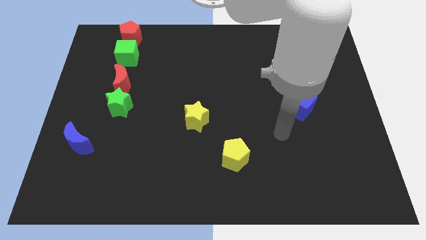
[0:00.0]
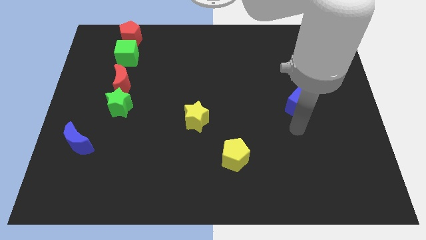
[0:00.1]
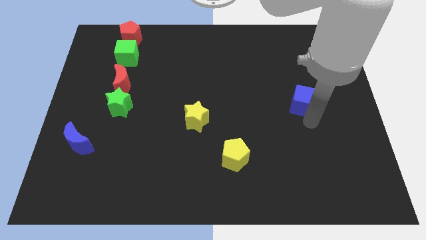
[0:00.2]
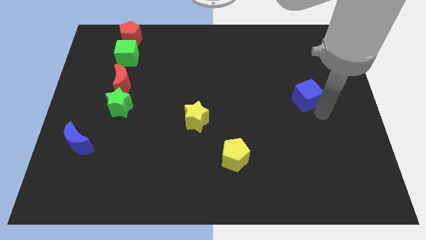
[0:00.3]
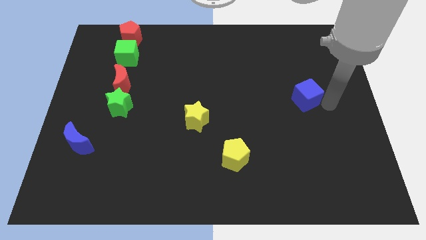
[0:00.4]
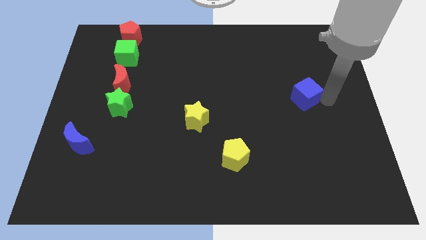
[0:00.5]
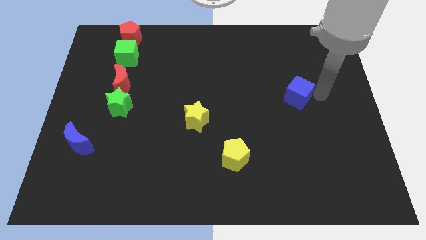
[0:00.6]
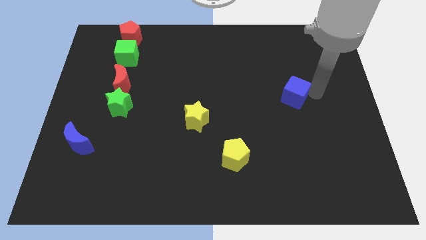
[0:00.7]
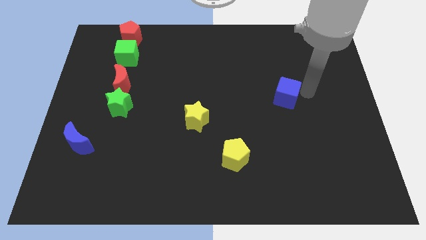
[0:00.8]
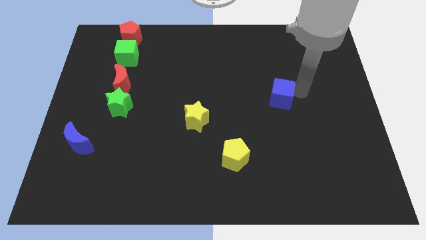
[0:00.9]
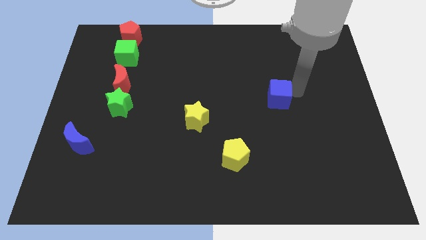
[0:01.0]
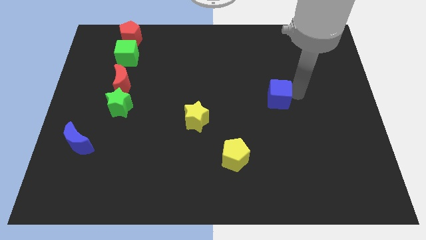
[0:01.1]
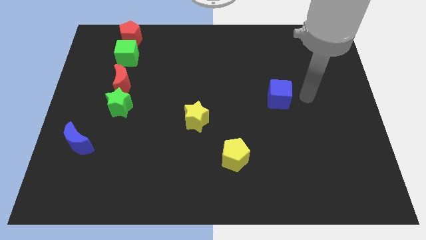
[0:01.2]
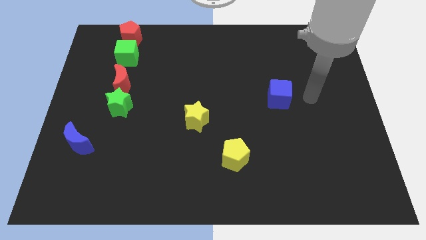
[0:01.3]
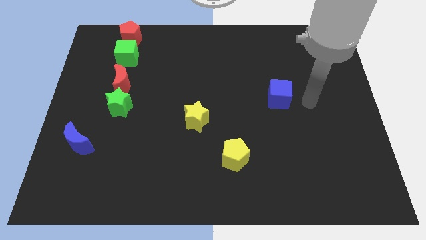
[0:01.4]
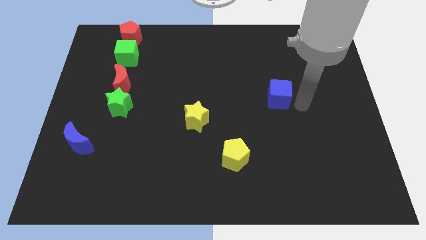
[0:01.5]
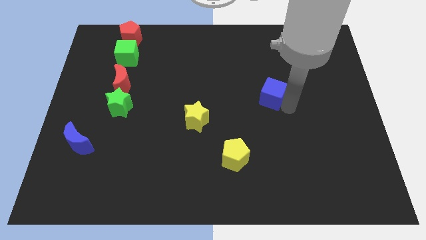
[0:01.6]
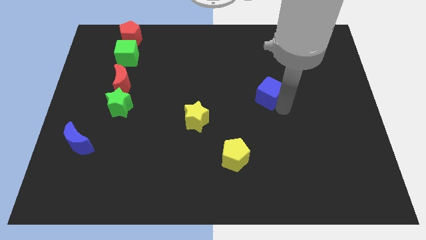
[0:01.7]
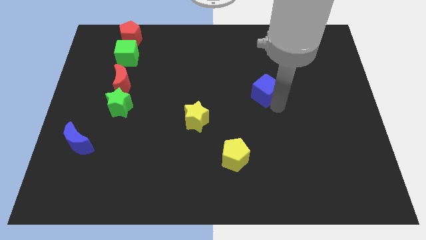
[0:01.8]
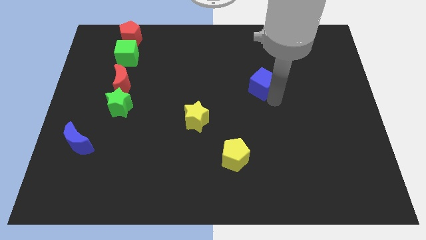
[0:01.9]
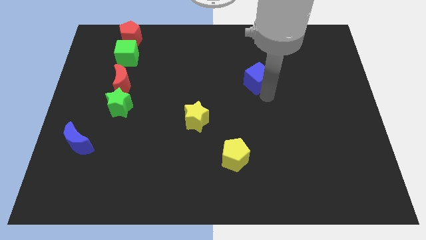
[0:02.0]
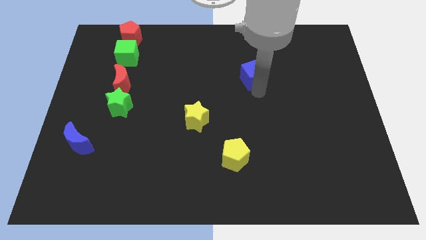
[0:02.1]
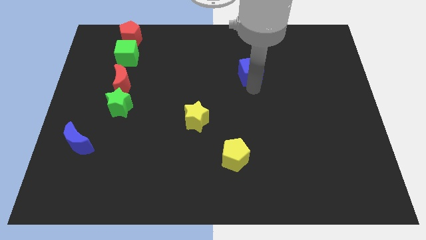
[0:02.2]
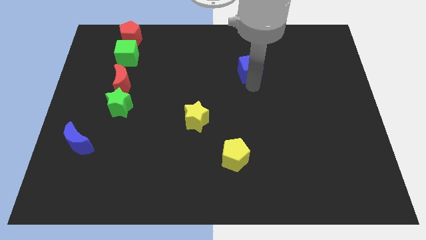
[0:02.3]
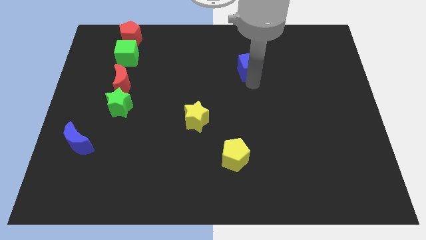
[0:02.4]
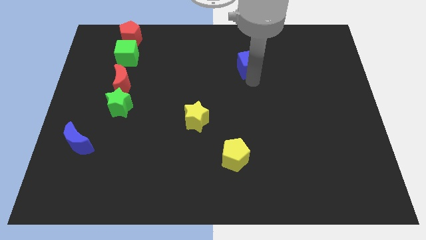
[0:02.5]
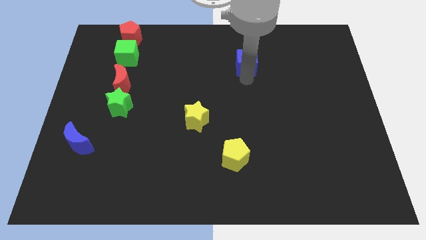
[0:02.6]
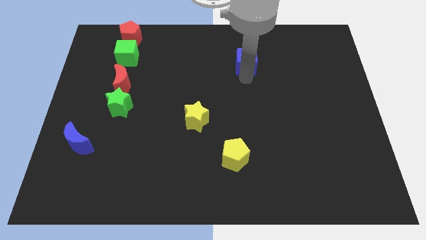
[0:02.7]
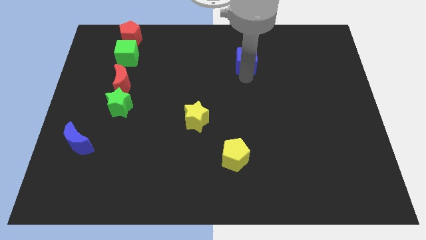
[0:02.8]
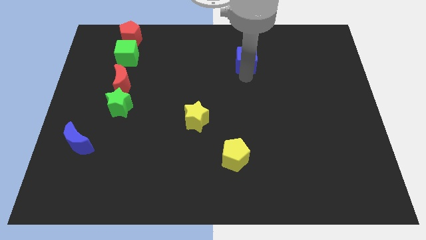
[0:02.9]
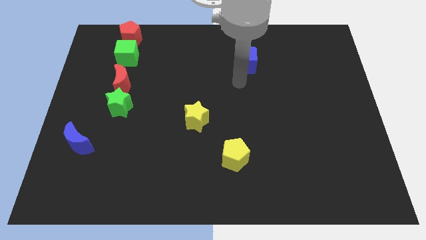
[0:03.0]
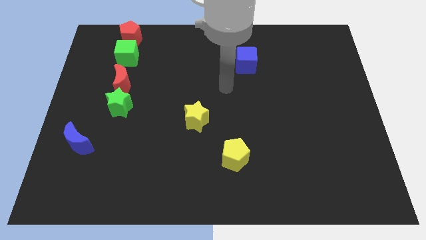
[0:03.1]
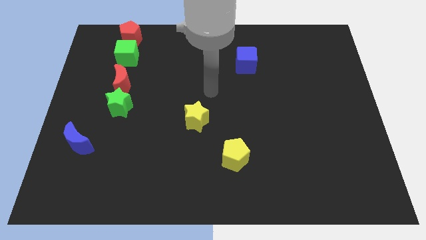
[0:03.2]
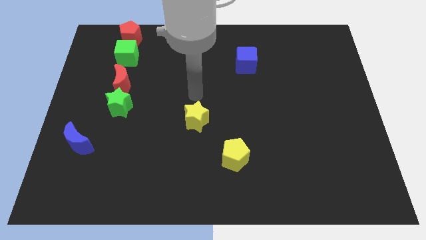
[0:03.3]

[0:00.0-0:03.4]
move blue cube slightly to the top of the board

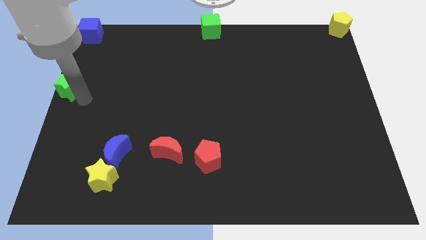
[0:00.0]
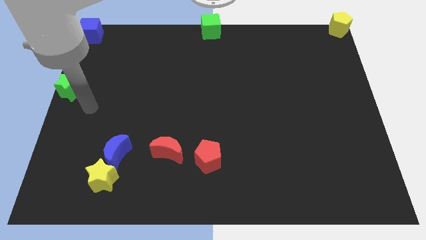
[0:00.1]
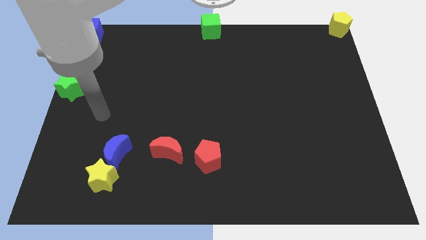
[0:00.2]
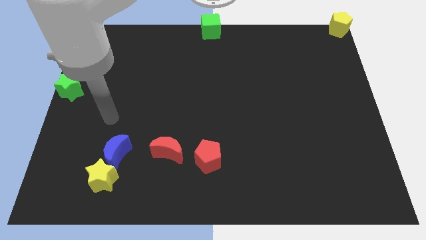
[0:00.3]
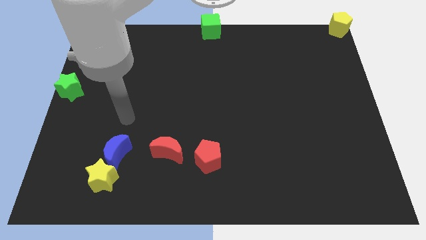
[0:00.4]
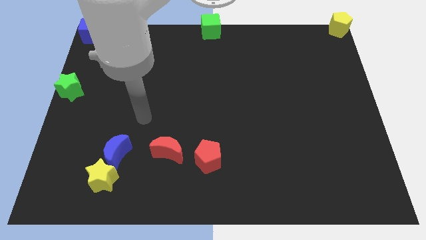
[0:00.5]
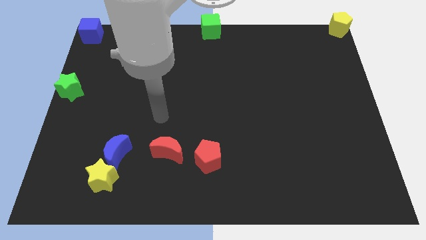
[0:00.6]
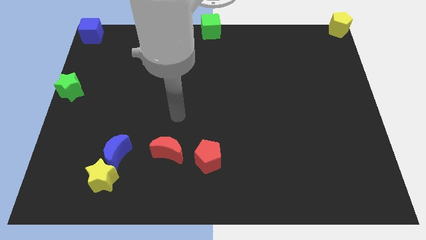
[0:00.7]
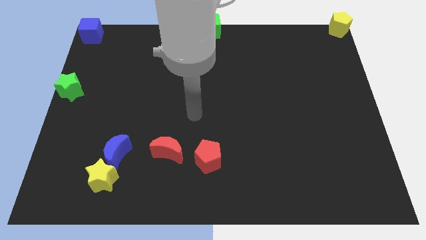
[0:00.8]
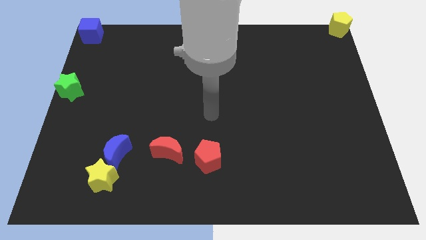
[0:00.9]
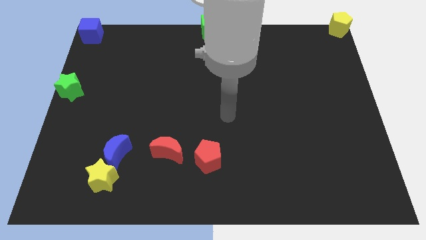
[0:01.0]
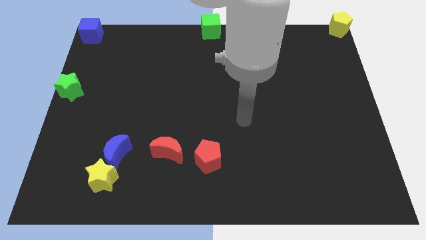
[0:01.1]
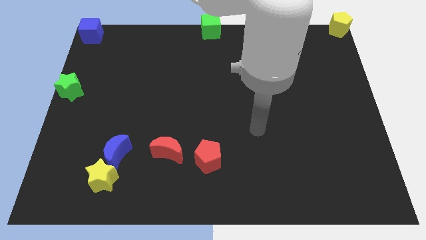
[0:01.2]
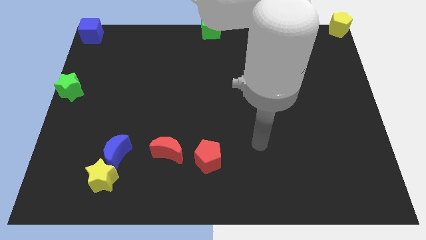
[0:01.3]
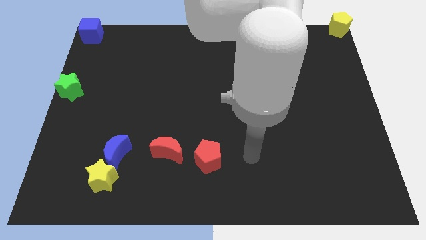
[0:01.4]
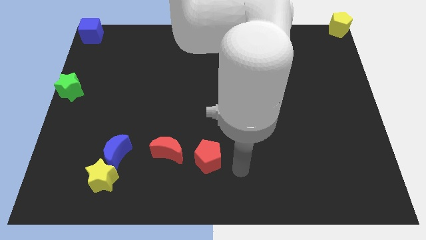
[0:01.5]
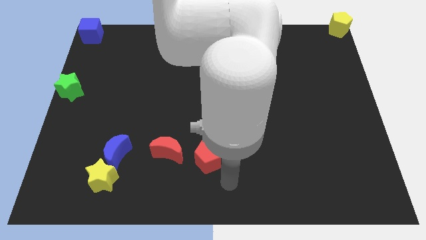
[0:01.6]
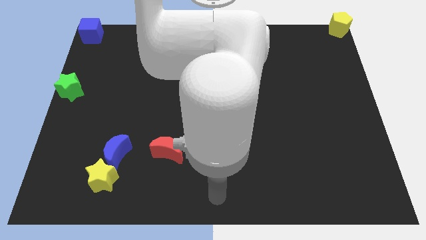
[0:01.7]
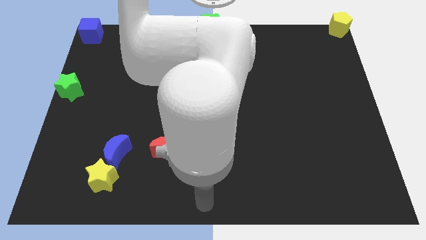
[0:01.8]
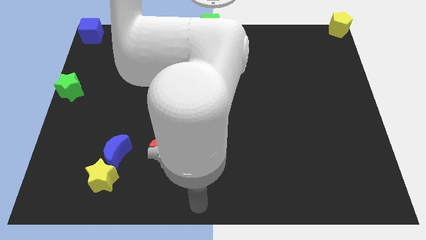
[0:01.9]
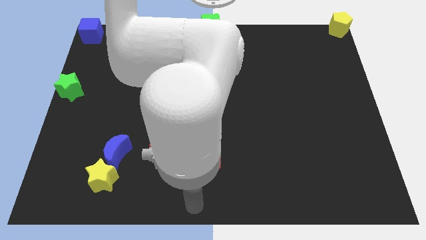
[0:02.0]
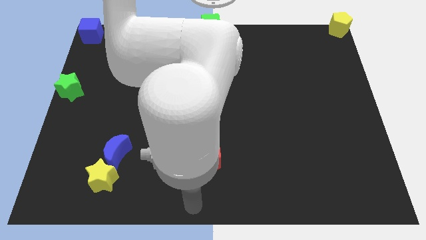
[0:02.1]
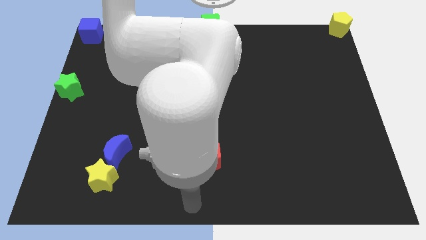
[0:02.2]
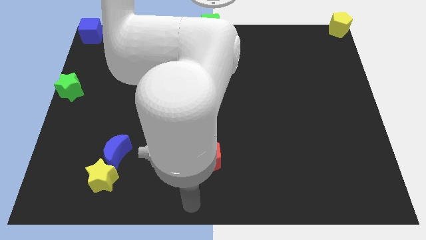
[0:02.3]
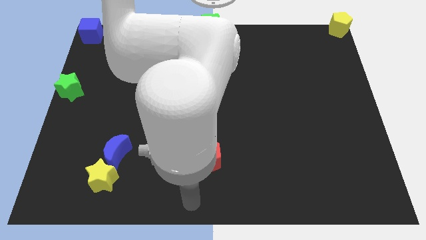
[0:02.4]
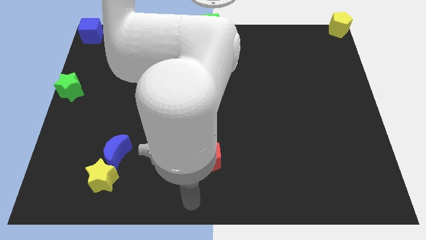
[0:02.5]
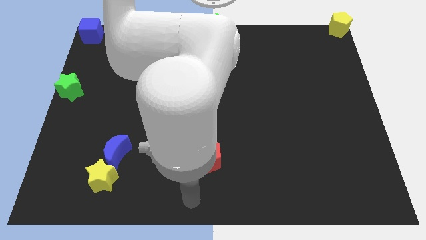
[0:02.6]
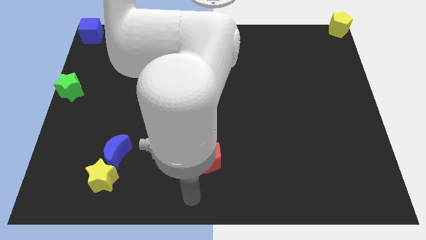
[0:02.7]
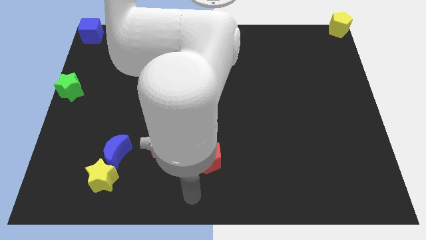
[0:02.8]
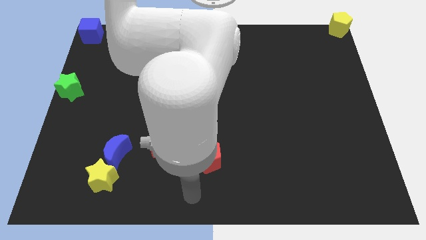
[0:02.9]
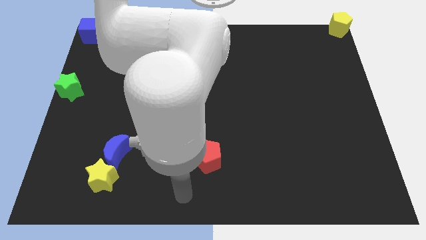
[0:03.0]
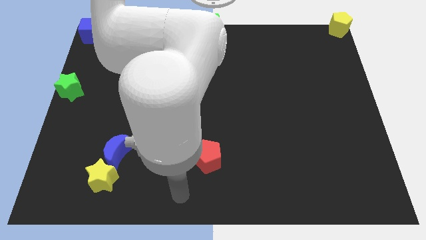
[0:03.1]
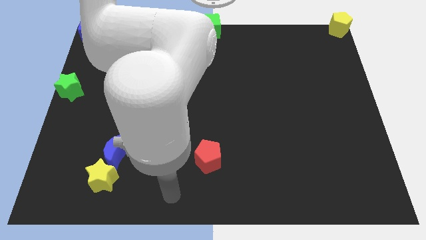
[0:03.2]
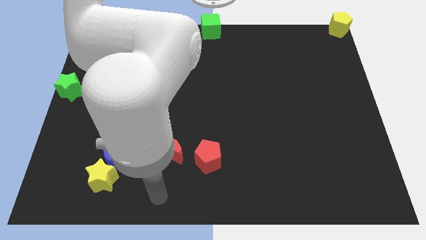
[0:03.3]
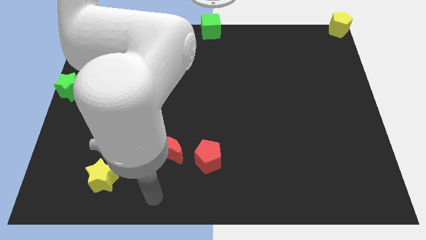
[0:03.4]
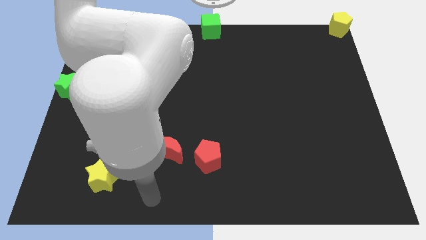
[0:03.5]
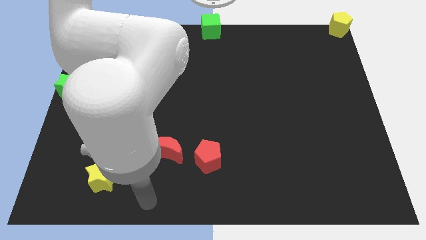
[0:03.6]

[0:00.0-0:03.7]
put your arm vertically to the bottom of the red crescent

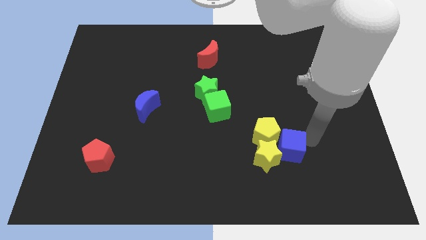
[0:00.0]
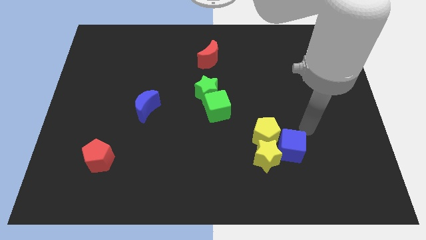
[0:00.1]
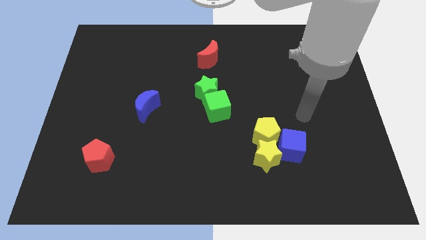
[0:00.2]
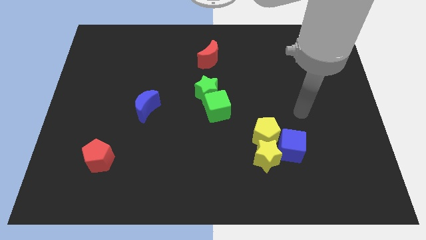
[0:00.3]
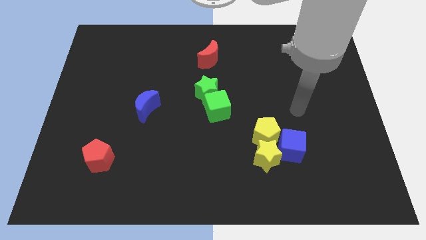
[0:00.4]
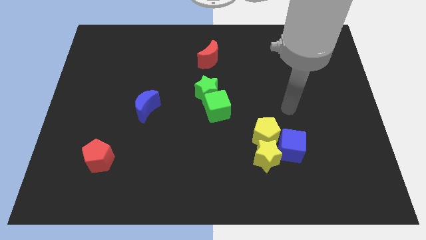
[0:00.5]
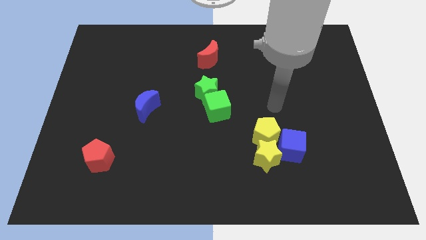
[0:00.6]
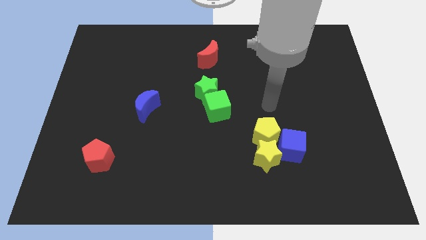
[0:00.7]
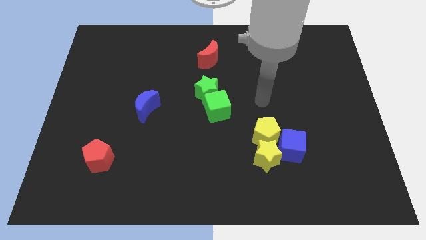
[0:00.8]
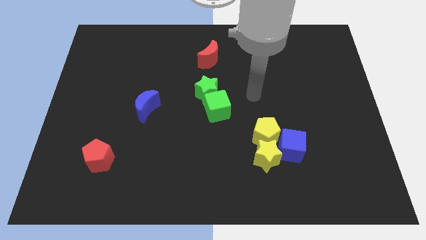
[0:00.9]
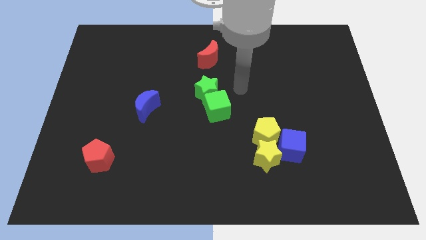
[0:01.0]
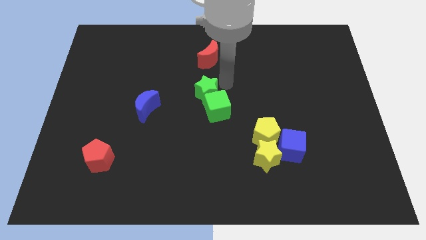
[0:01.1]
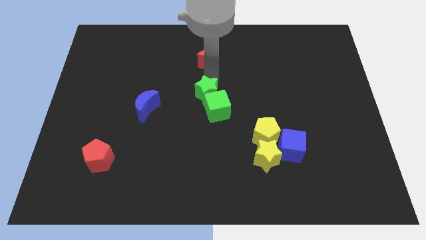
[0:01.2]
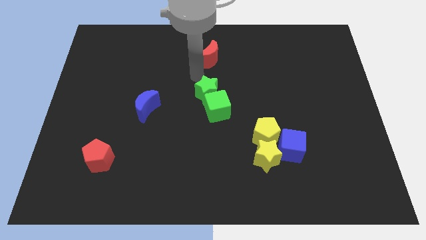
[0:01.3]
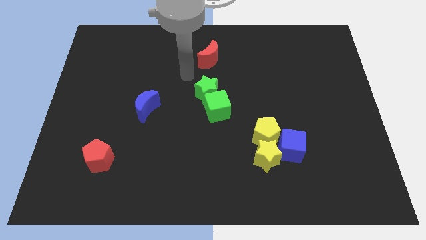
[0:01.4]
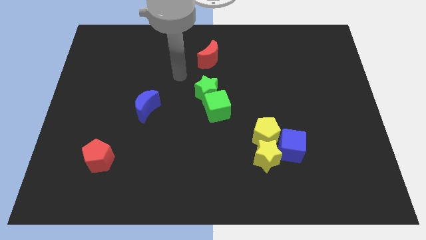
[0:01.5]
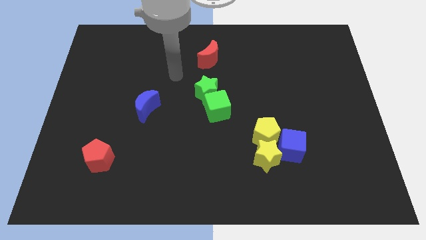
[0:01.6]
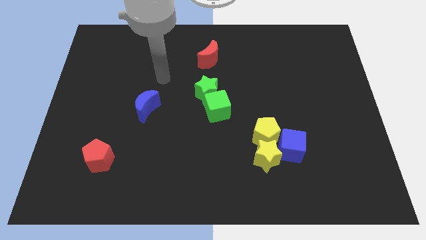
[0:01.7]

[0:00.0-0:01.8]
move your arm away from the blue cube

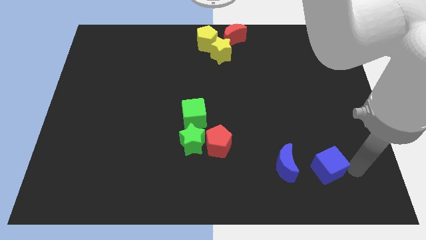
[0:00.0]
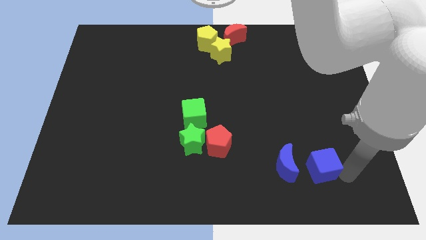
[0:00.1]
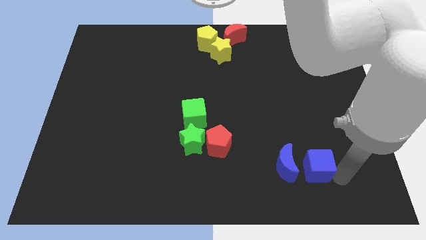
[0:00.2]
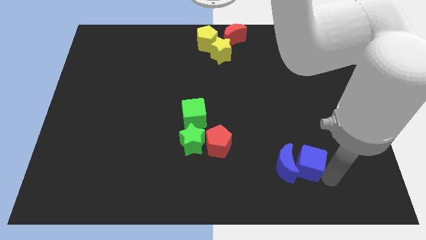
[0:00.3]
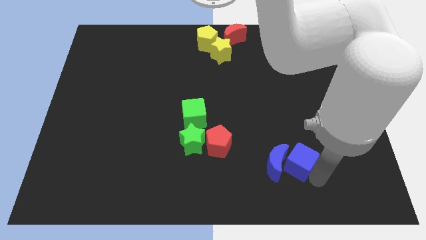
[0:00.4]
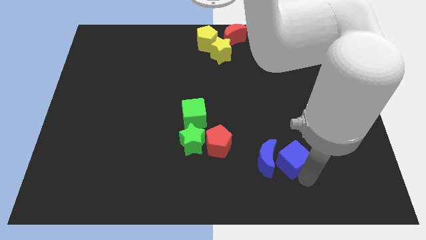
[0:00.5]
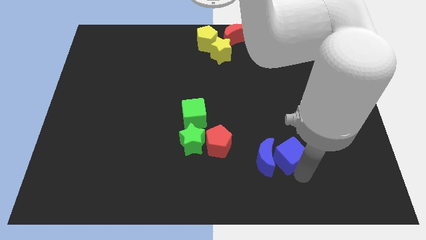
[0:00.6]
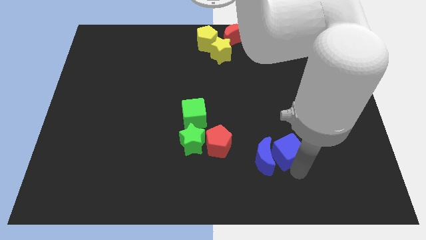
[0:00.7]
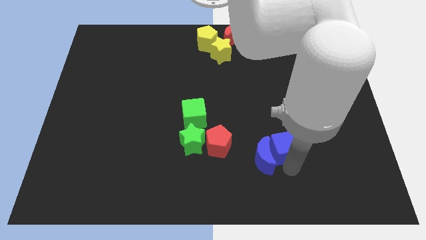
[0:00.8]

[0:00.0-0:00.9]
push the blue blocks towards the center of the board
